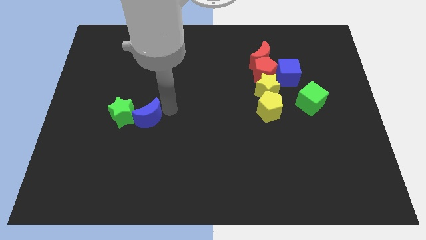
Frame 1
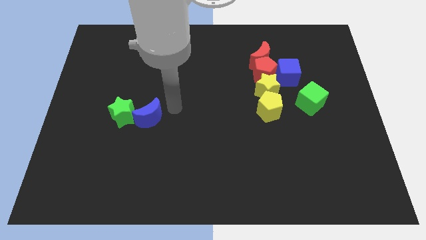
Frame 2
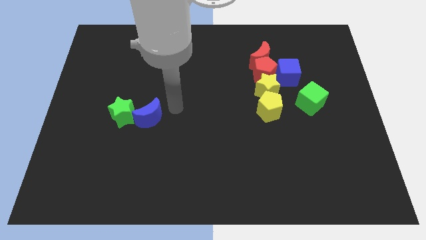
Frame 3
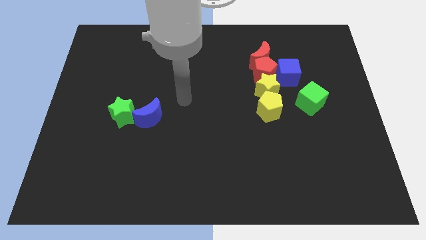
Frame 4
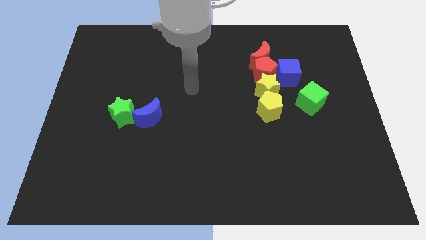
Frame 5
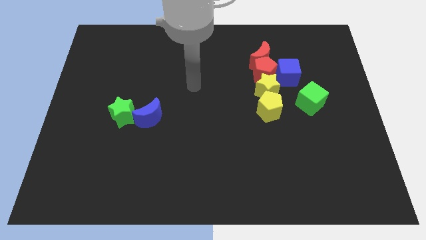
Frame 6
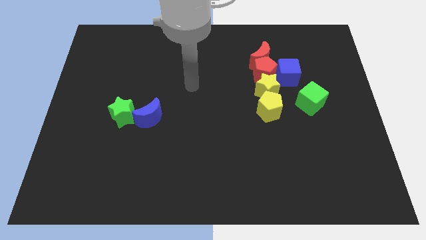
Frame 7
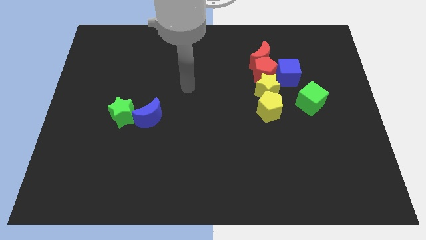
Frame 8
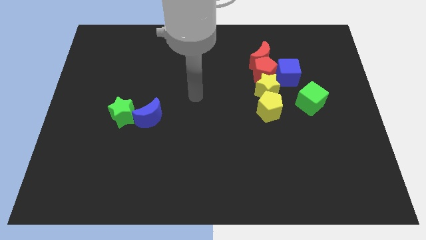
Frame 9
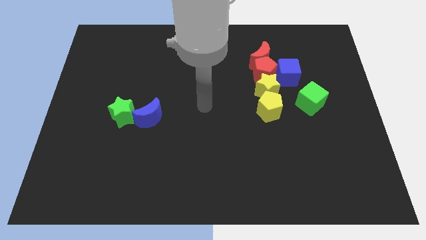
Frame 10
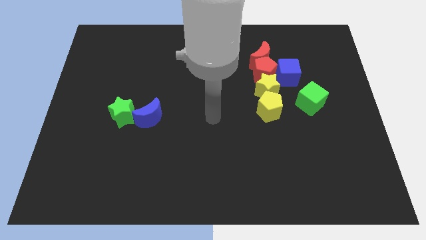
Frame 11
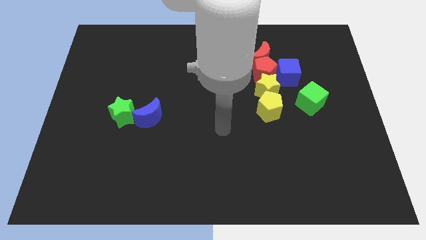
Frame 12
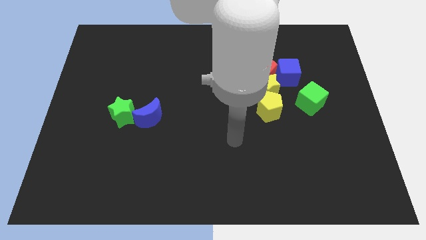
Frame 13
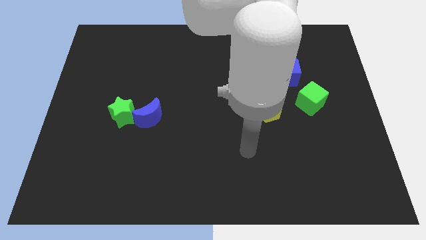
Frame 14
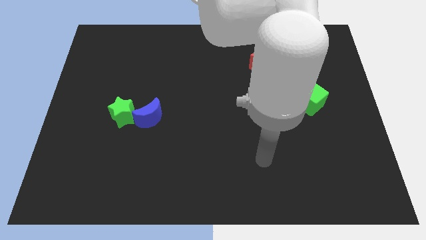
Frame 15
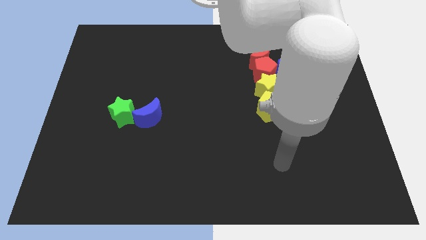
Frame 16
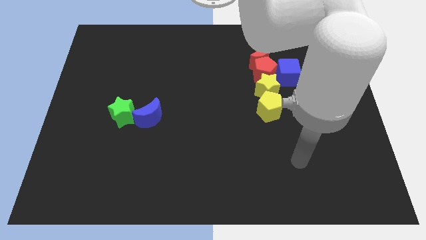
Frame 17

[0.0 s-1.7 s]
drag your arm away from the blue crescent

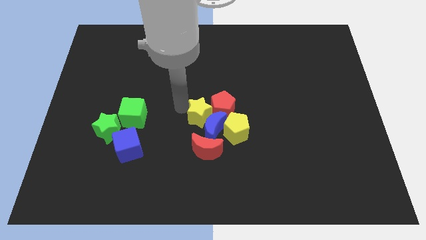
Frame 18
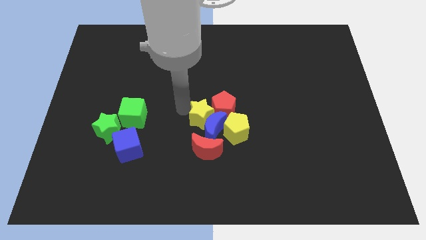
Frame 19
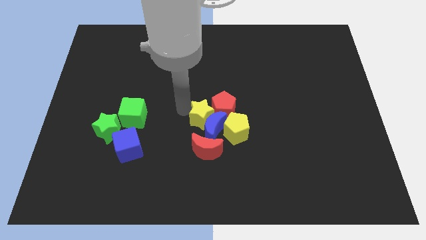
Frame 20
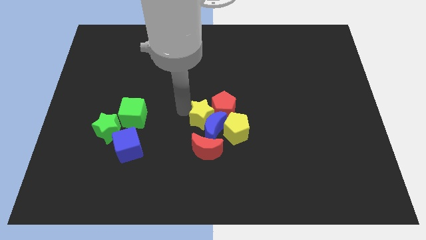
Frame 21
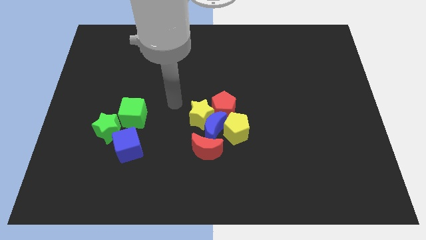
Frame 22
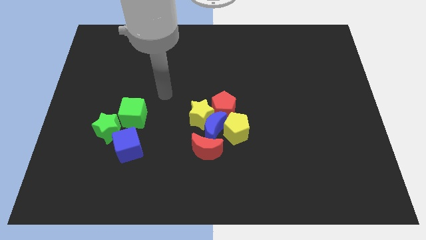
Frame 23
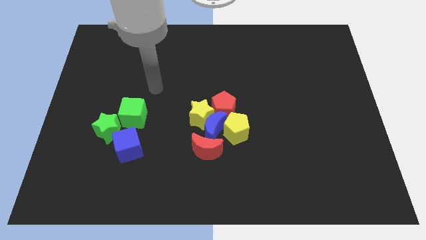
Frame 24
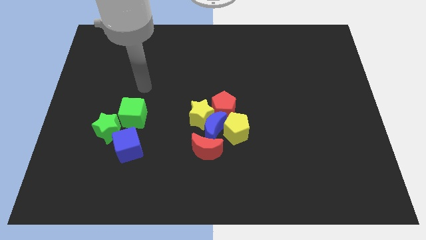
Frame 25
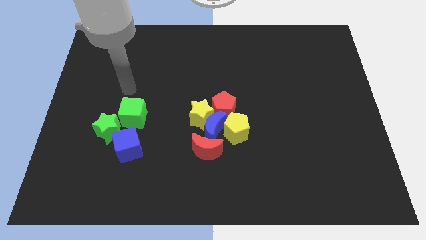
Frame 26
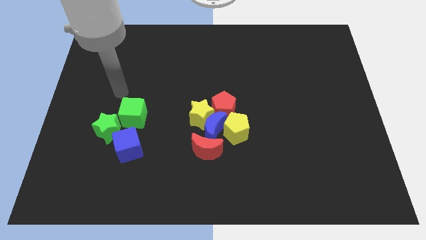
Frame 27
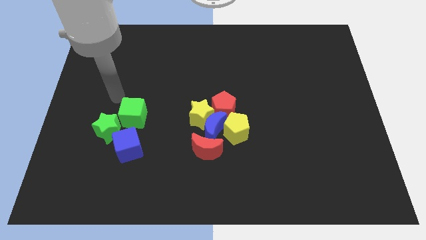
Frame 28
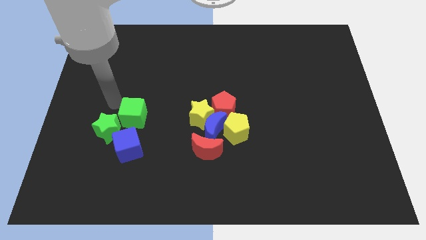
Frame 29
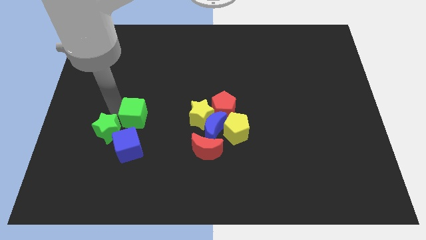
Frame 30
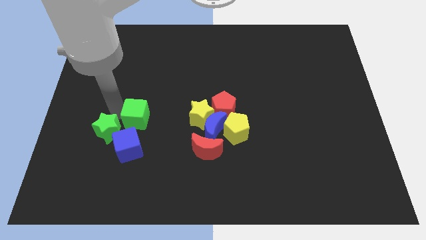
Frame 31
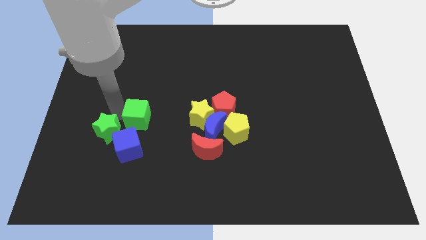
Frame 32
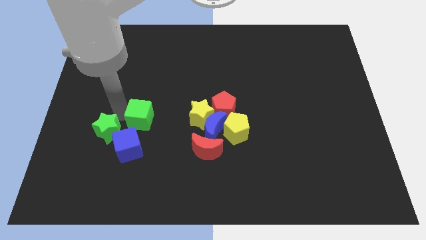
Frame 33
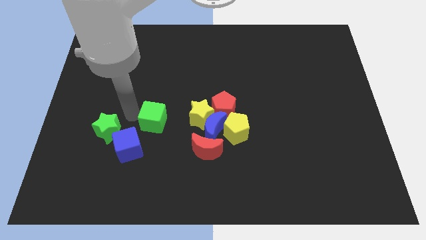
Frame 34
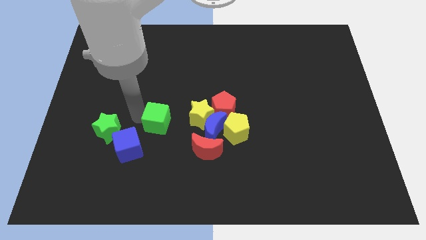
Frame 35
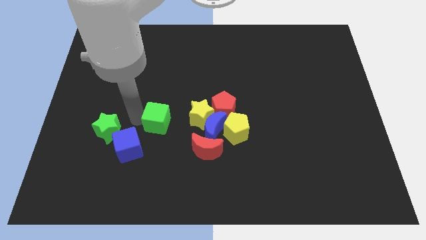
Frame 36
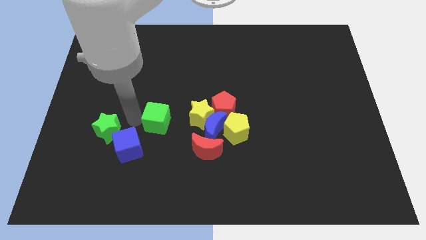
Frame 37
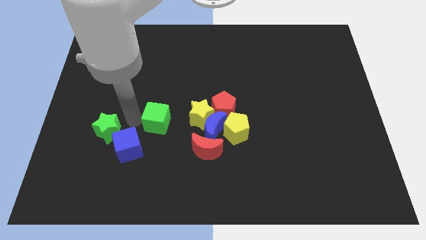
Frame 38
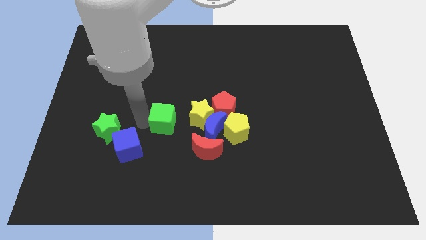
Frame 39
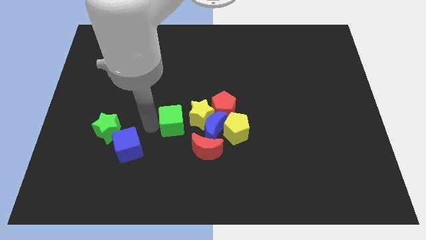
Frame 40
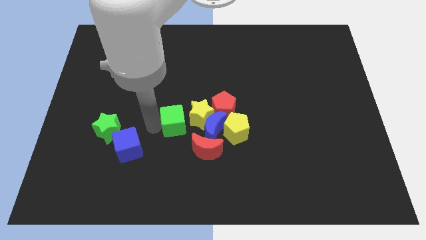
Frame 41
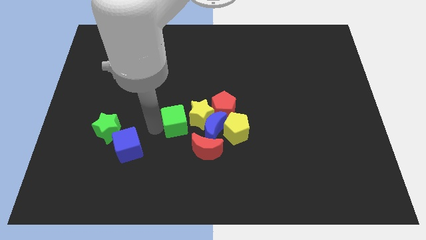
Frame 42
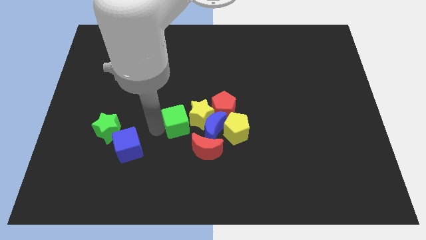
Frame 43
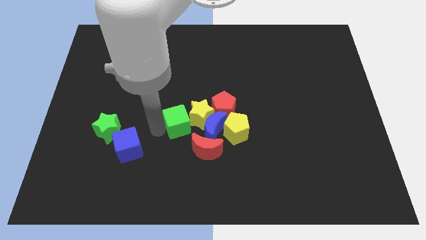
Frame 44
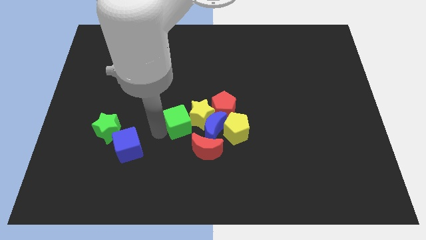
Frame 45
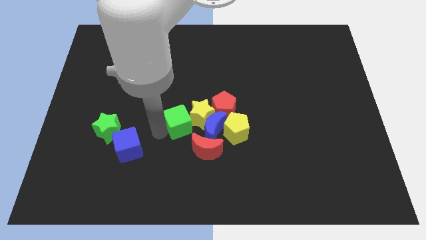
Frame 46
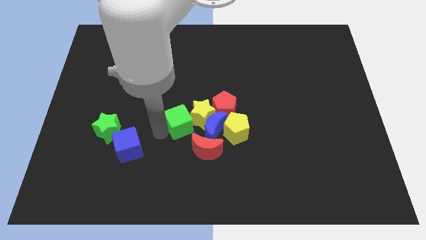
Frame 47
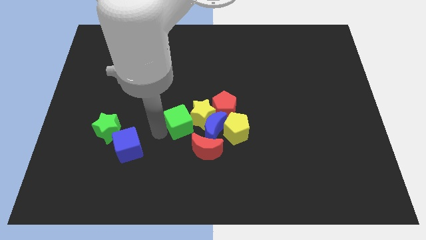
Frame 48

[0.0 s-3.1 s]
put the green cube horizontally to the left of the blue moon

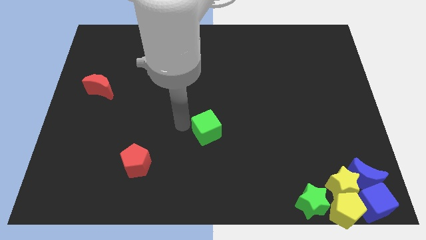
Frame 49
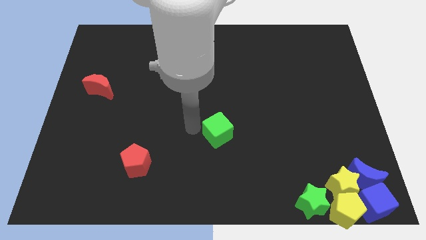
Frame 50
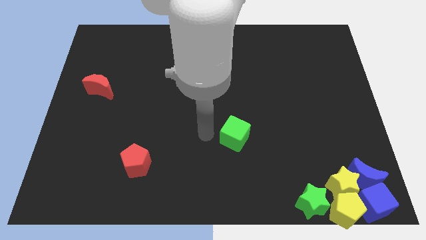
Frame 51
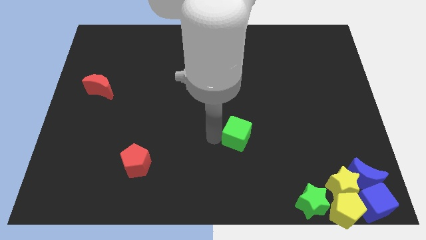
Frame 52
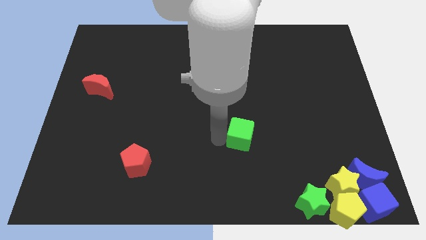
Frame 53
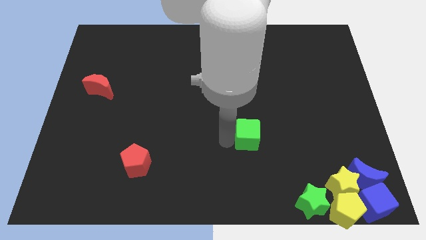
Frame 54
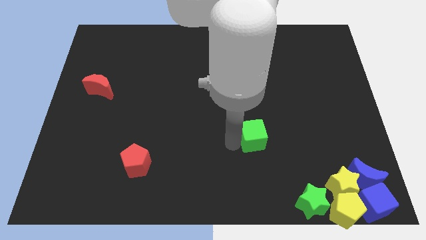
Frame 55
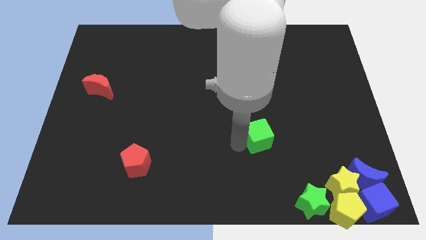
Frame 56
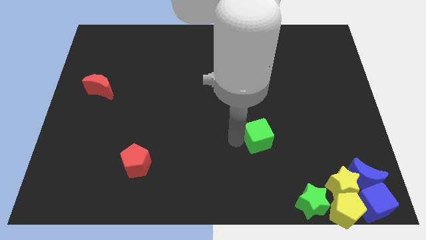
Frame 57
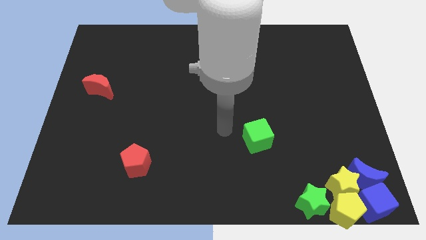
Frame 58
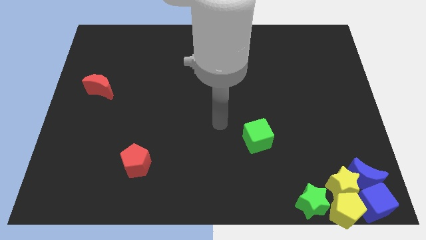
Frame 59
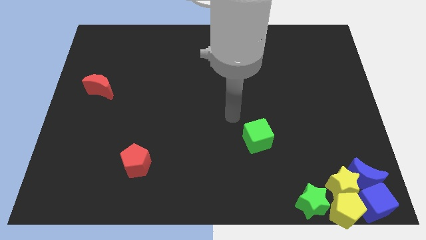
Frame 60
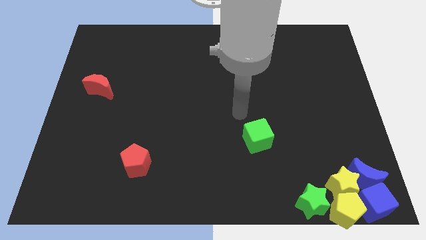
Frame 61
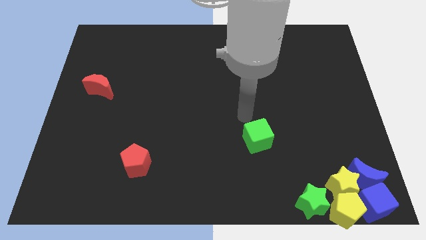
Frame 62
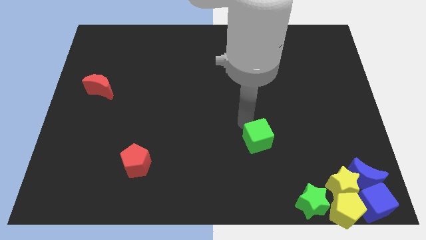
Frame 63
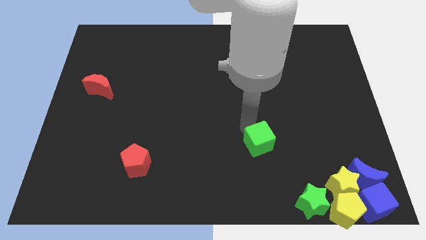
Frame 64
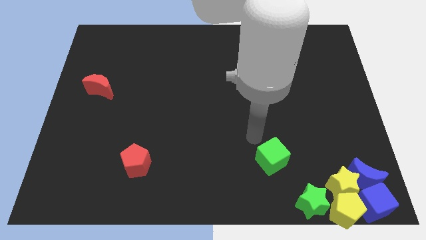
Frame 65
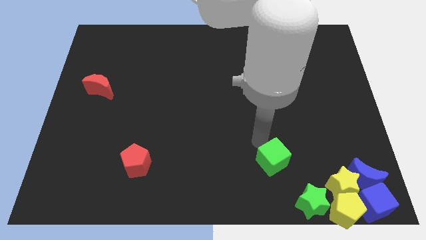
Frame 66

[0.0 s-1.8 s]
put the green cube parallel to red pentagon

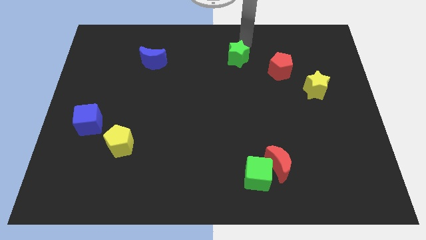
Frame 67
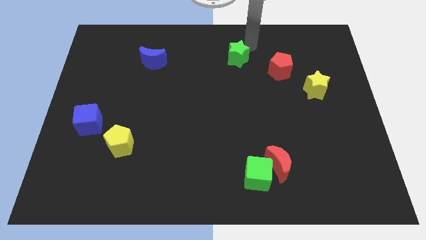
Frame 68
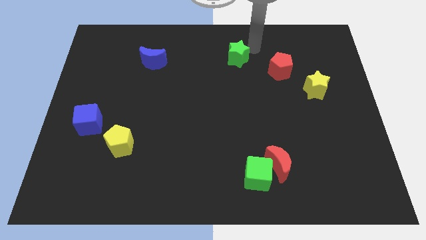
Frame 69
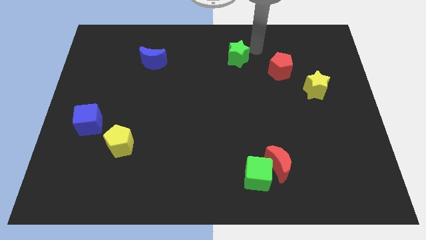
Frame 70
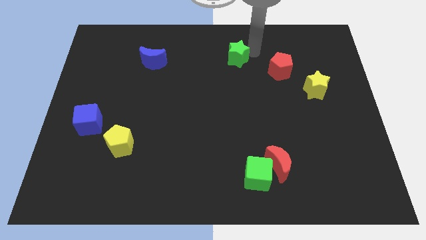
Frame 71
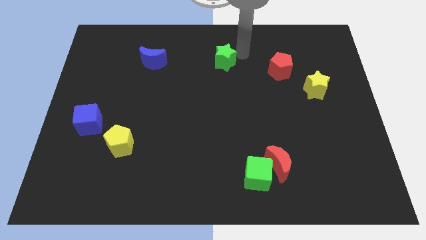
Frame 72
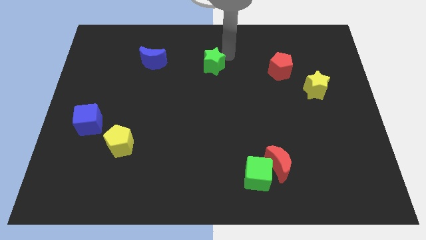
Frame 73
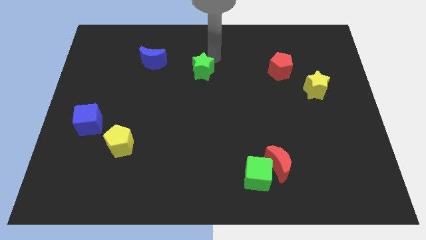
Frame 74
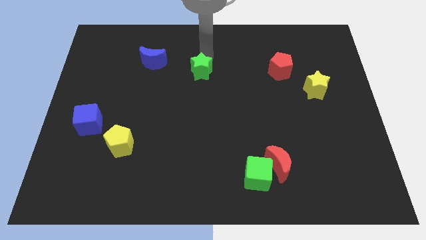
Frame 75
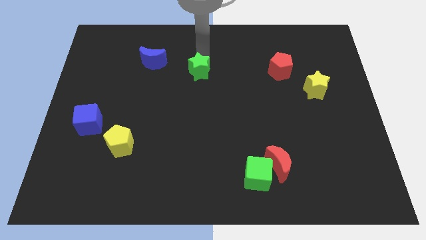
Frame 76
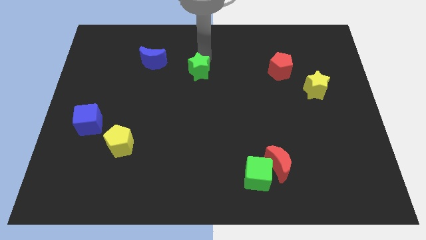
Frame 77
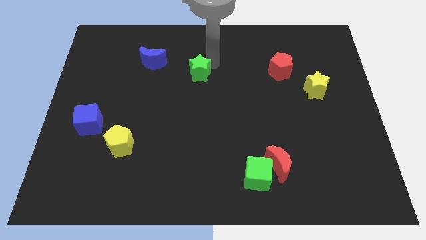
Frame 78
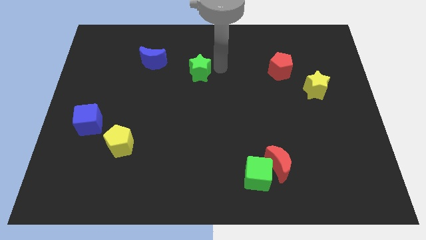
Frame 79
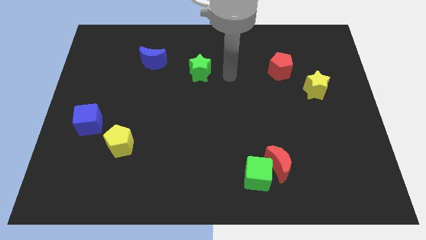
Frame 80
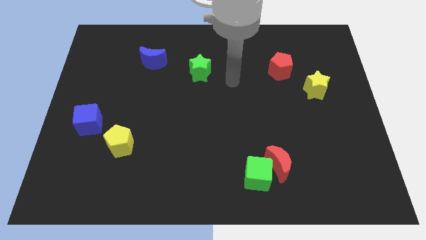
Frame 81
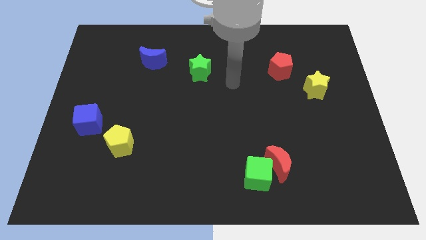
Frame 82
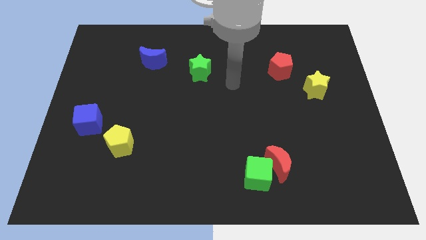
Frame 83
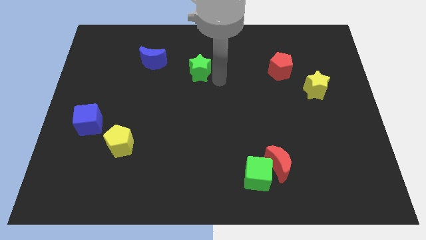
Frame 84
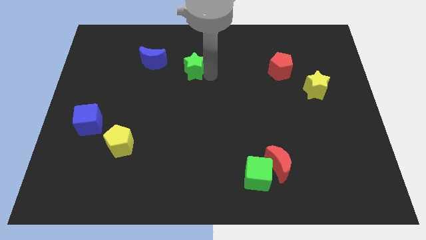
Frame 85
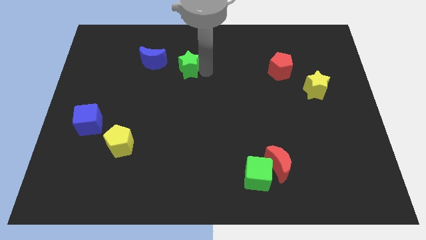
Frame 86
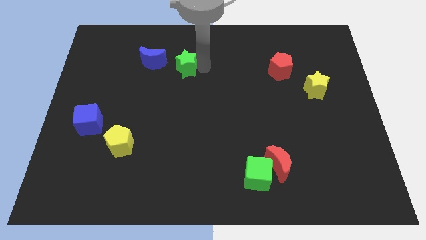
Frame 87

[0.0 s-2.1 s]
slide the green star towards the right side of the blue crescent

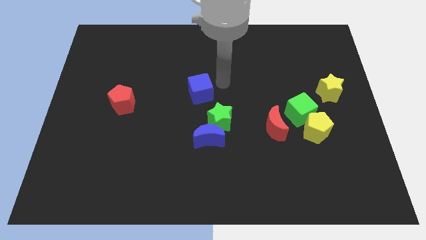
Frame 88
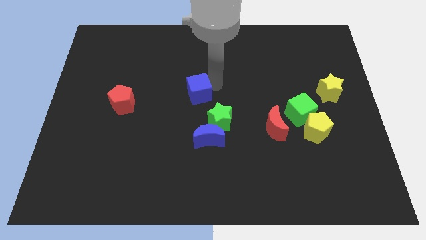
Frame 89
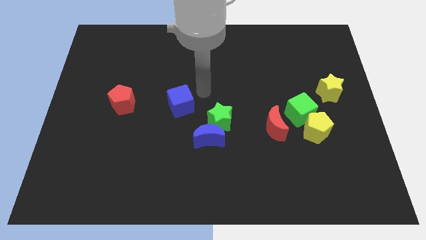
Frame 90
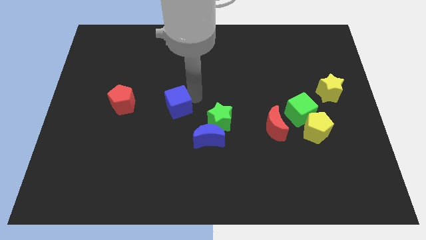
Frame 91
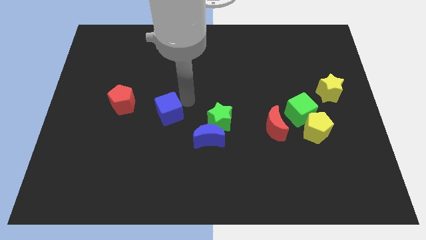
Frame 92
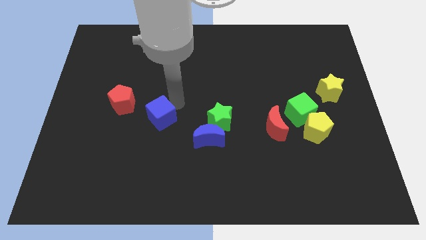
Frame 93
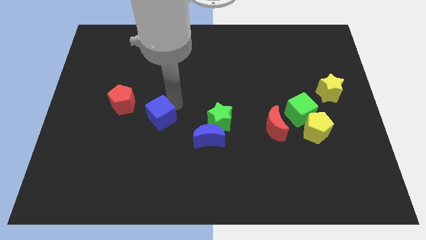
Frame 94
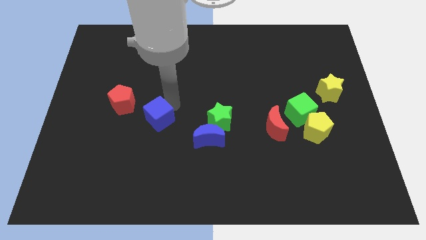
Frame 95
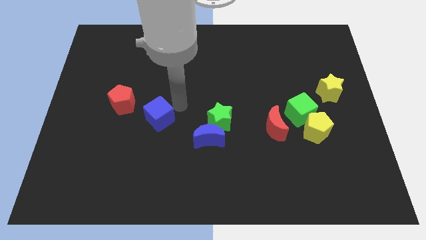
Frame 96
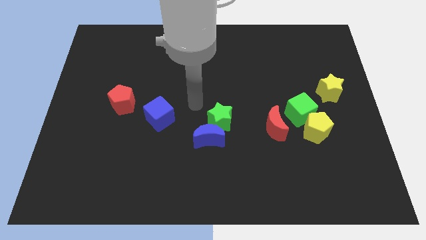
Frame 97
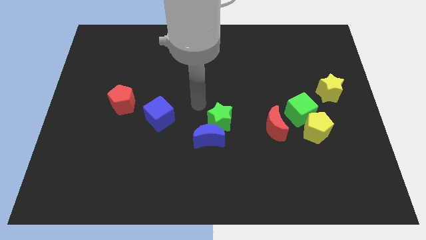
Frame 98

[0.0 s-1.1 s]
place blue cube to the left of green star
